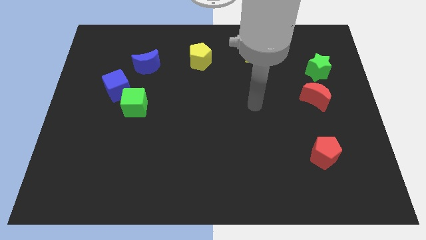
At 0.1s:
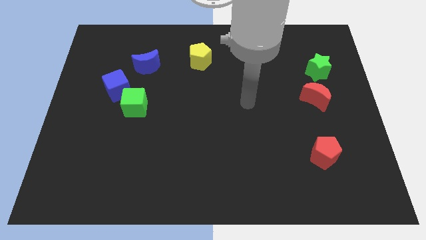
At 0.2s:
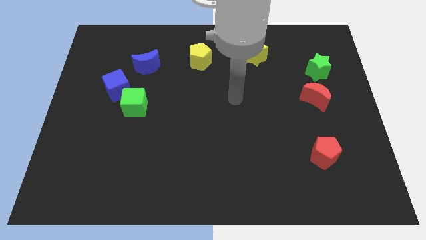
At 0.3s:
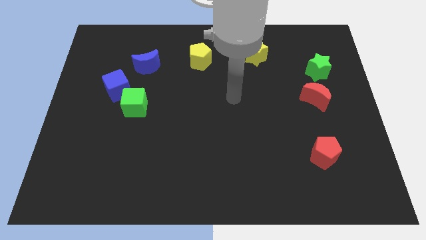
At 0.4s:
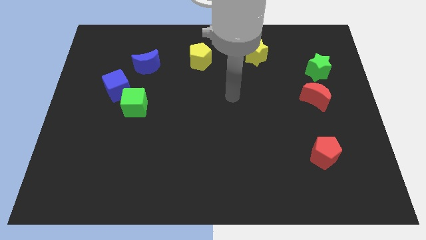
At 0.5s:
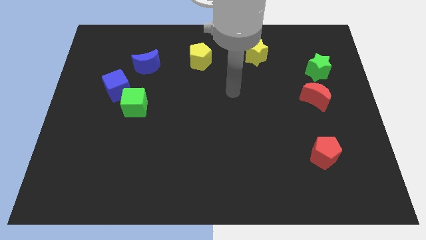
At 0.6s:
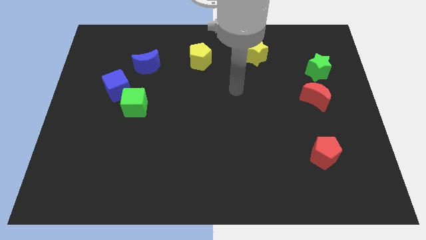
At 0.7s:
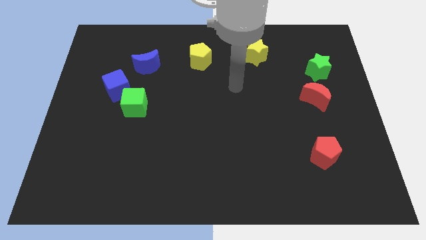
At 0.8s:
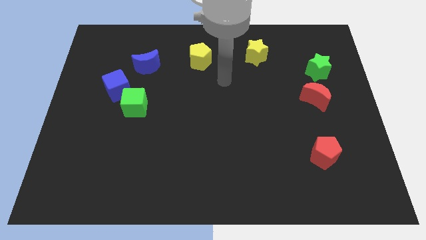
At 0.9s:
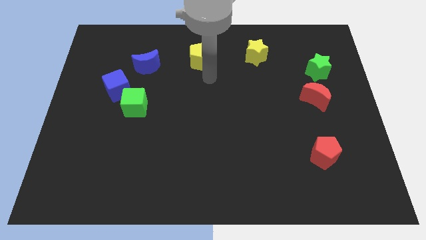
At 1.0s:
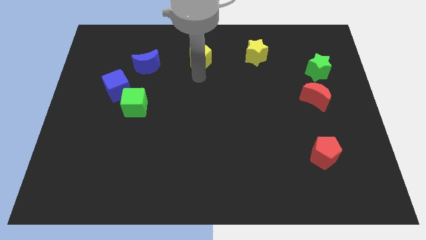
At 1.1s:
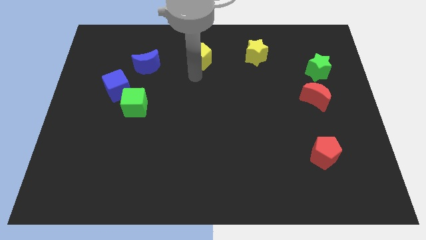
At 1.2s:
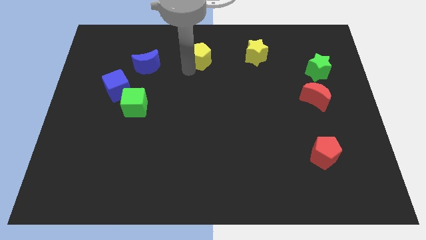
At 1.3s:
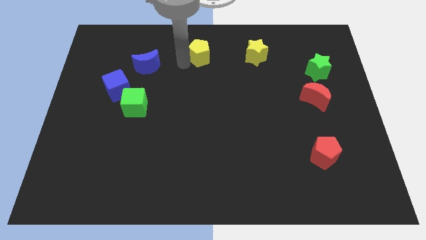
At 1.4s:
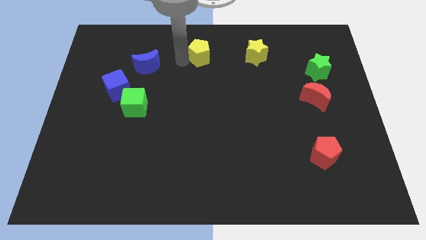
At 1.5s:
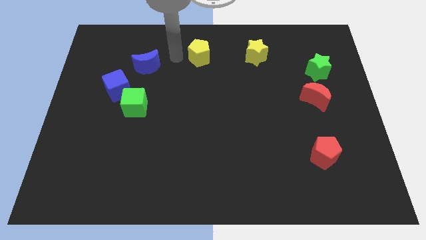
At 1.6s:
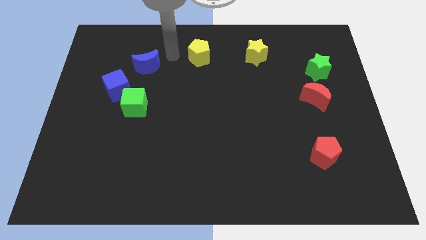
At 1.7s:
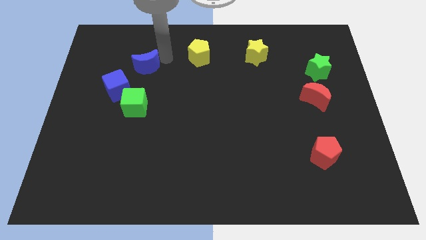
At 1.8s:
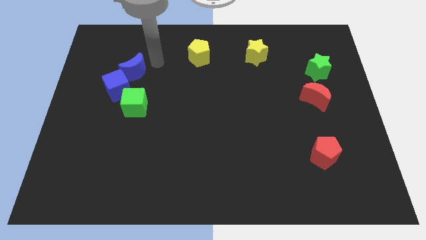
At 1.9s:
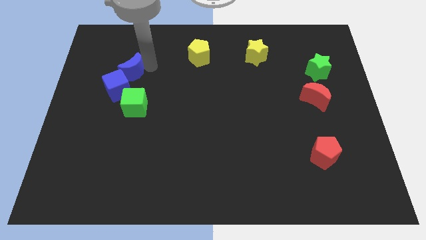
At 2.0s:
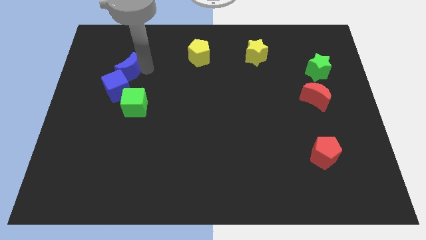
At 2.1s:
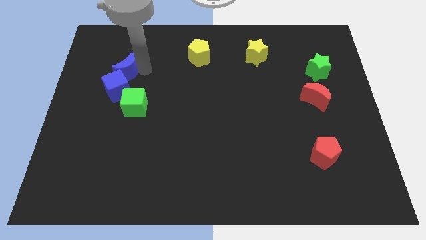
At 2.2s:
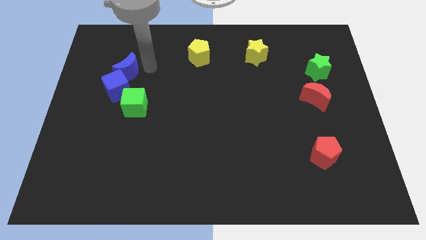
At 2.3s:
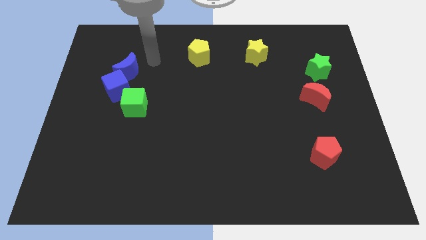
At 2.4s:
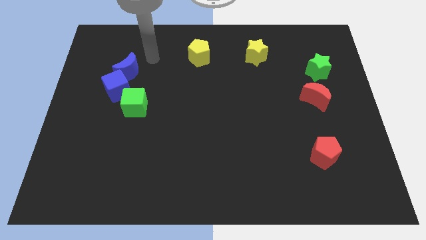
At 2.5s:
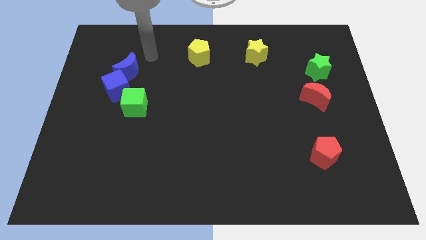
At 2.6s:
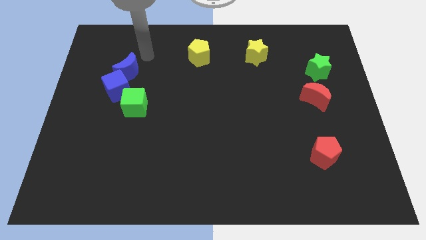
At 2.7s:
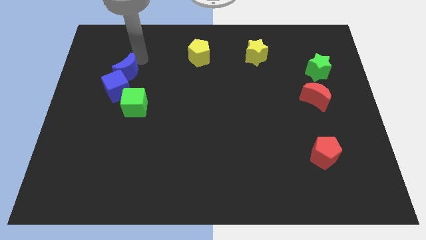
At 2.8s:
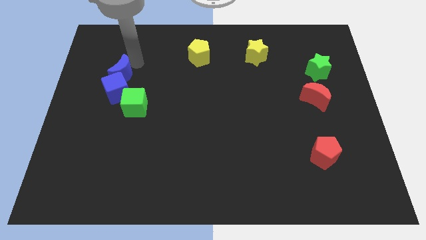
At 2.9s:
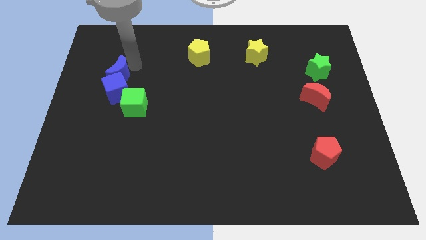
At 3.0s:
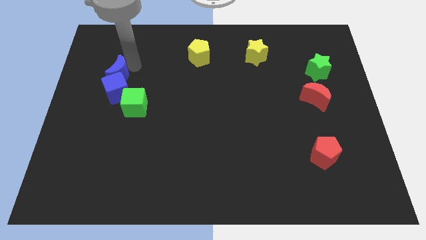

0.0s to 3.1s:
push blue moon into blue cube

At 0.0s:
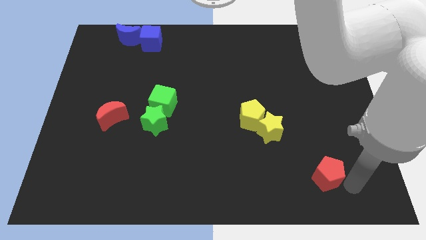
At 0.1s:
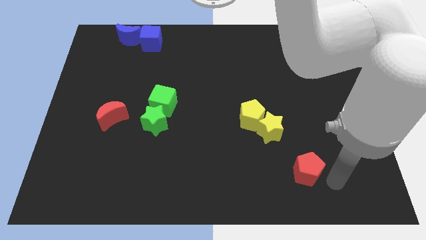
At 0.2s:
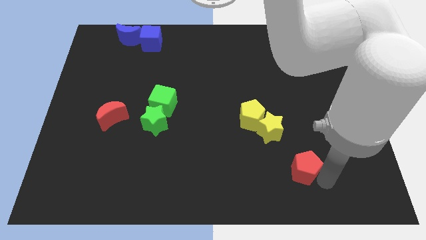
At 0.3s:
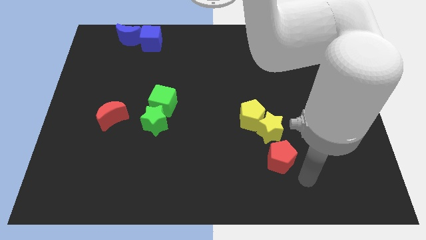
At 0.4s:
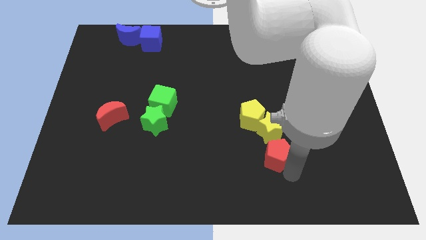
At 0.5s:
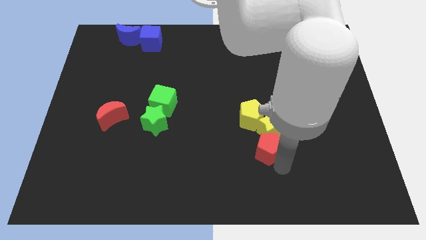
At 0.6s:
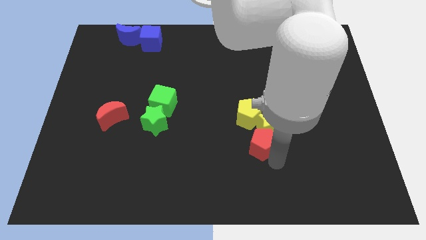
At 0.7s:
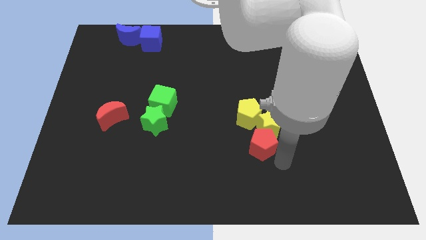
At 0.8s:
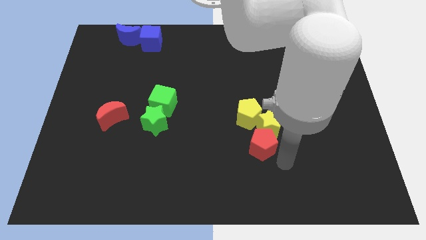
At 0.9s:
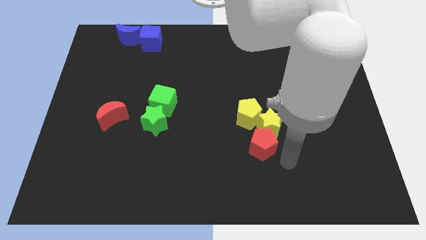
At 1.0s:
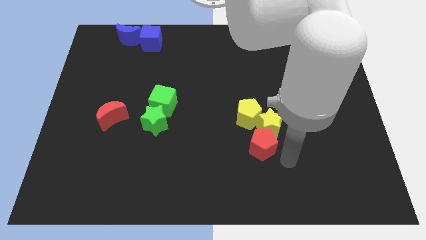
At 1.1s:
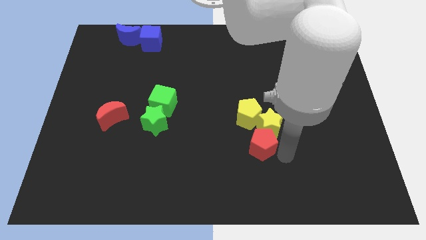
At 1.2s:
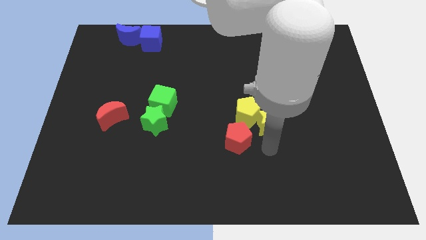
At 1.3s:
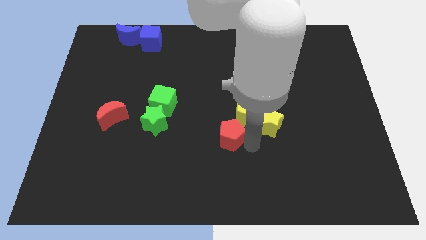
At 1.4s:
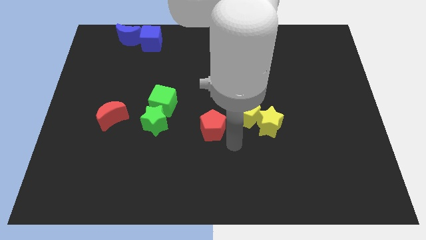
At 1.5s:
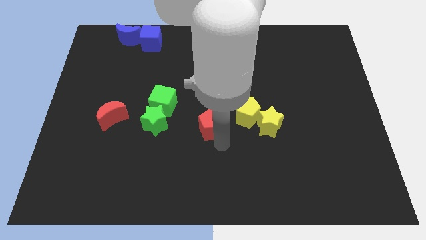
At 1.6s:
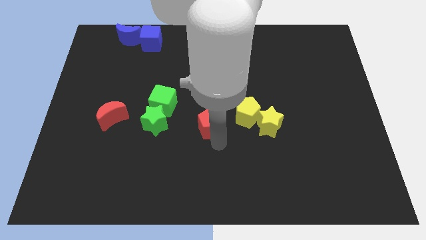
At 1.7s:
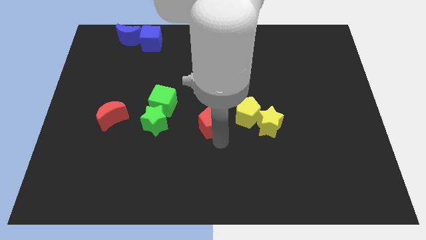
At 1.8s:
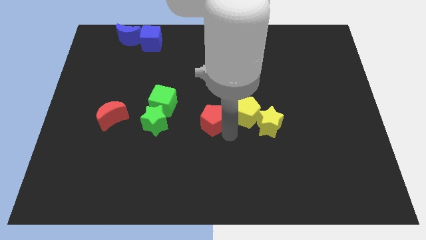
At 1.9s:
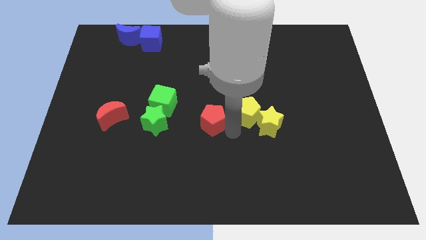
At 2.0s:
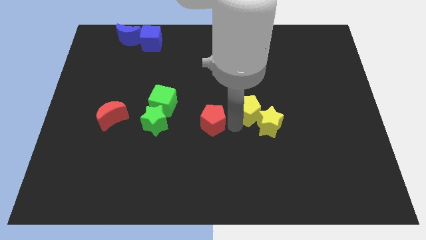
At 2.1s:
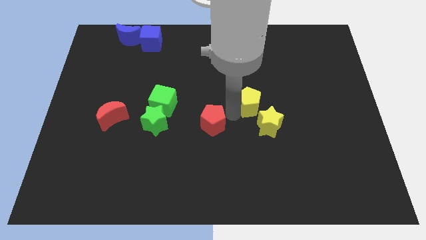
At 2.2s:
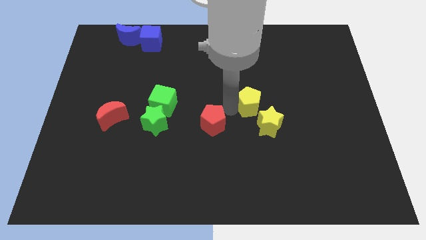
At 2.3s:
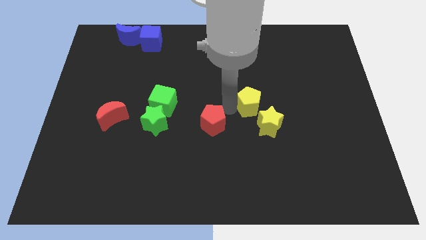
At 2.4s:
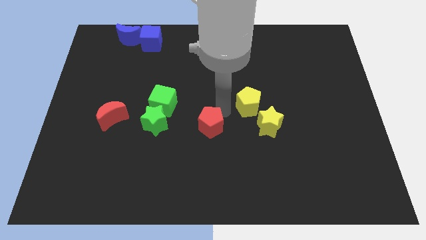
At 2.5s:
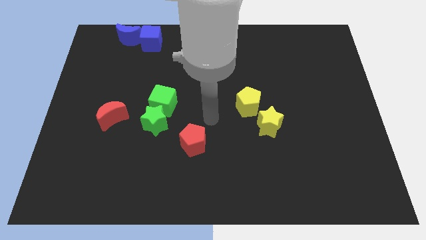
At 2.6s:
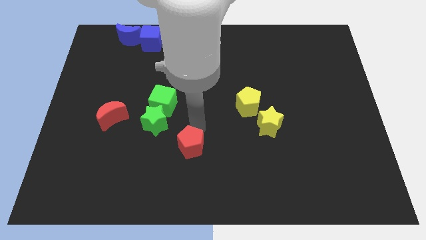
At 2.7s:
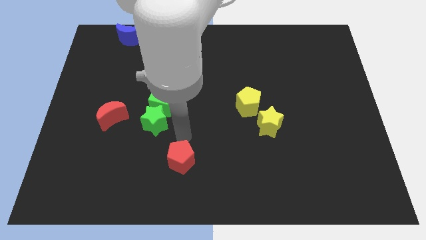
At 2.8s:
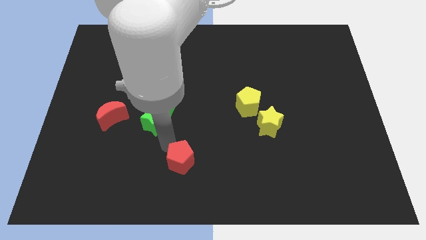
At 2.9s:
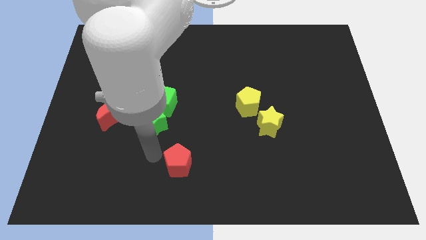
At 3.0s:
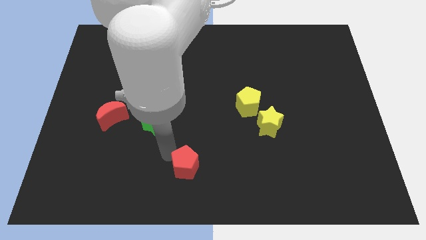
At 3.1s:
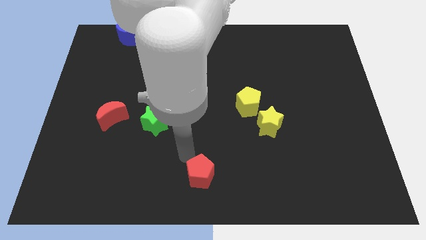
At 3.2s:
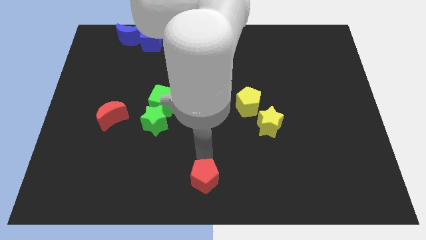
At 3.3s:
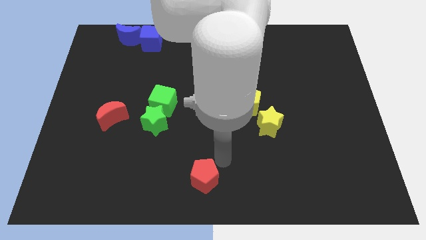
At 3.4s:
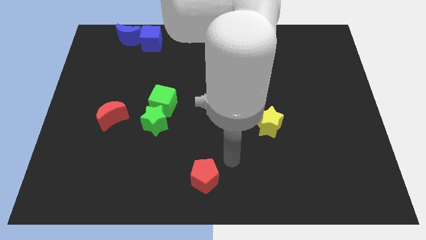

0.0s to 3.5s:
place the red pentagon to the bottom middle of the board

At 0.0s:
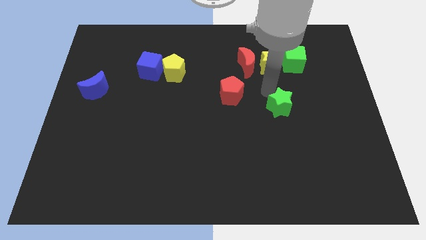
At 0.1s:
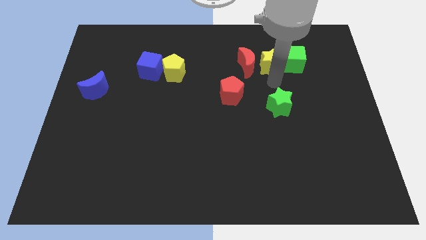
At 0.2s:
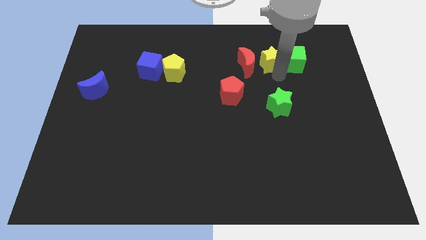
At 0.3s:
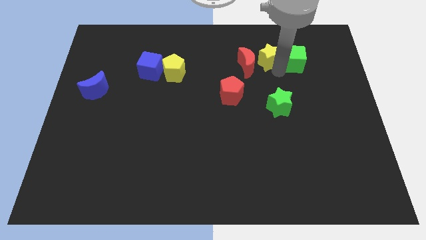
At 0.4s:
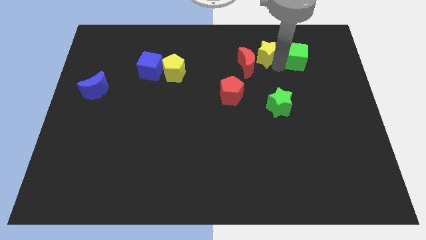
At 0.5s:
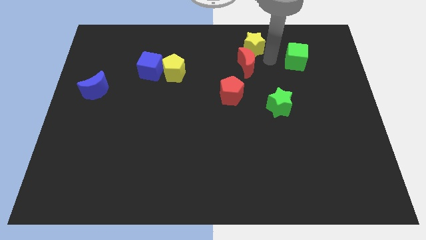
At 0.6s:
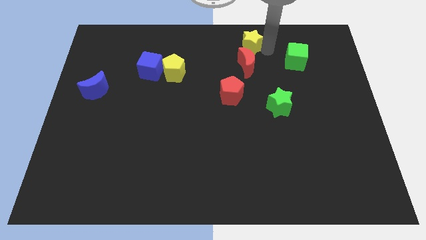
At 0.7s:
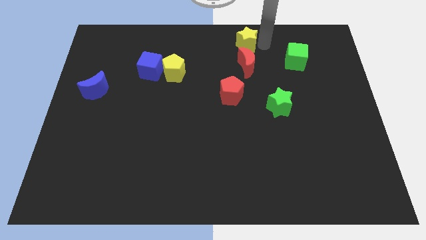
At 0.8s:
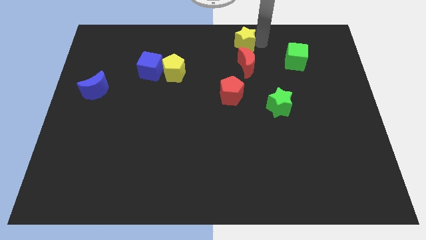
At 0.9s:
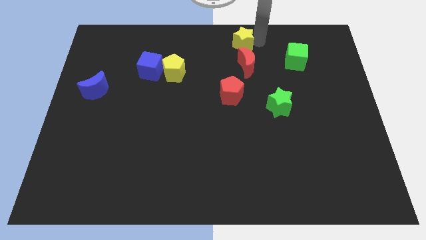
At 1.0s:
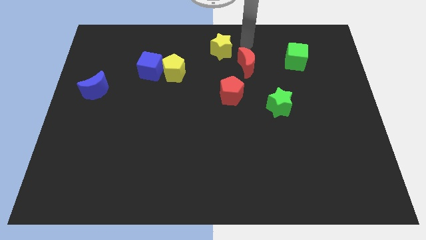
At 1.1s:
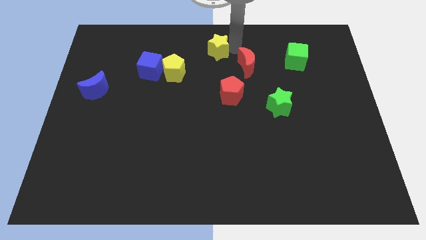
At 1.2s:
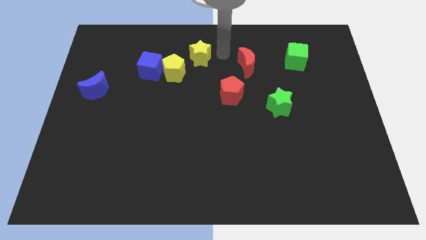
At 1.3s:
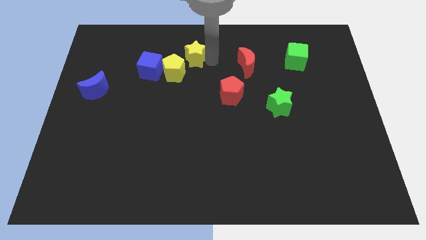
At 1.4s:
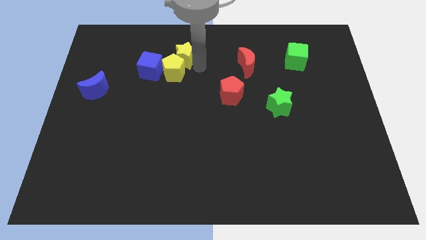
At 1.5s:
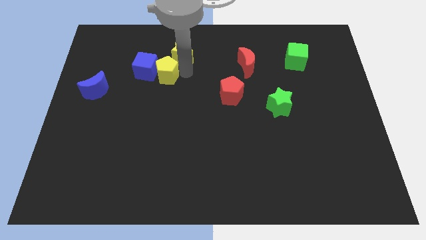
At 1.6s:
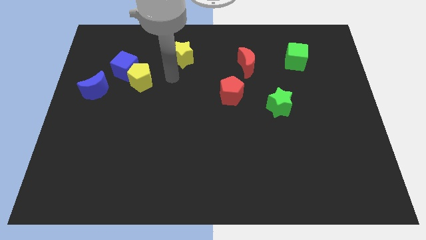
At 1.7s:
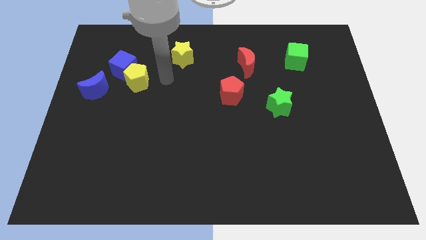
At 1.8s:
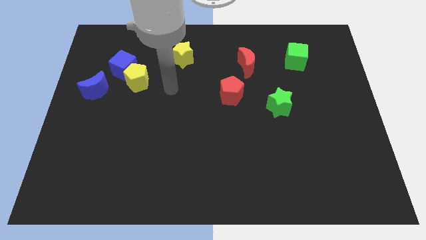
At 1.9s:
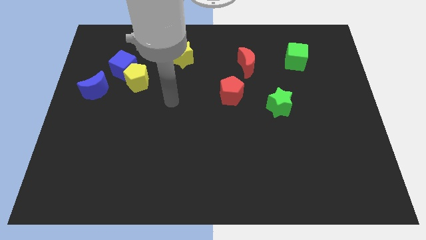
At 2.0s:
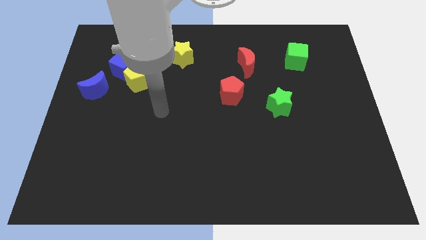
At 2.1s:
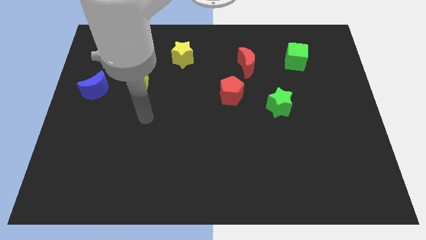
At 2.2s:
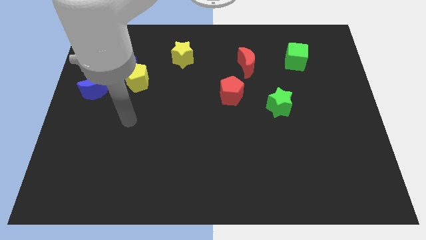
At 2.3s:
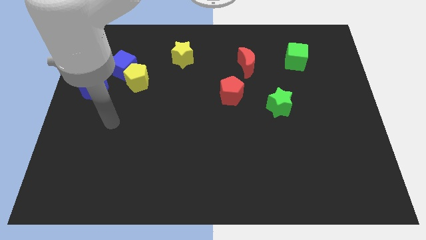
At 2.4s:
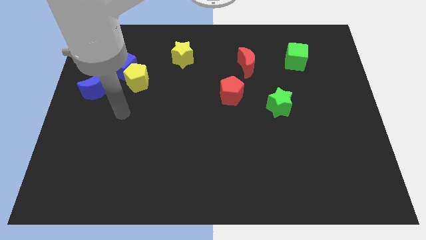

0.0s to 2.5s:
push the yellow pentagon diagonal to the yellow star
